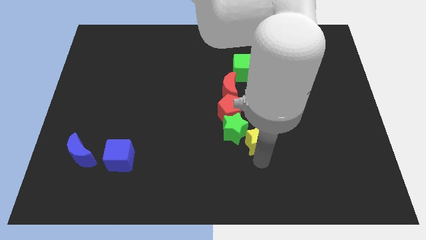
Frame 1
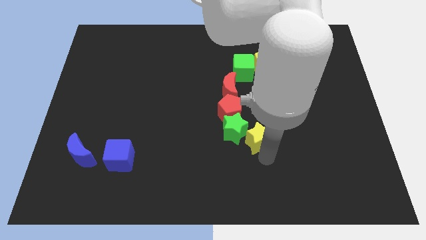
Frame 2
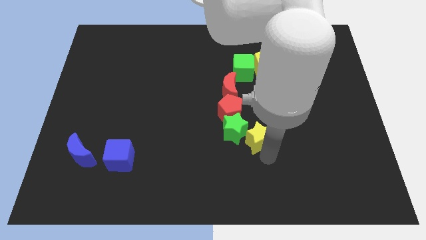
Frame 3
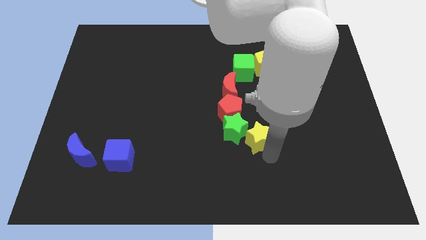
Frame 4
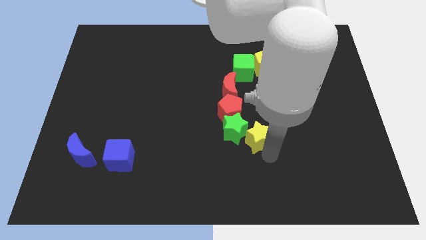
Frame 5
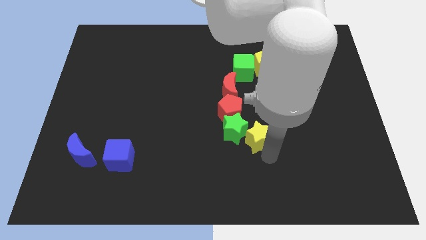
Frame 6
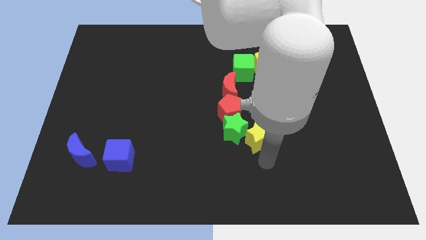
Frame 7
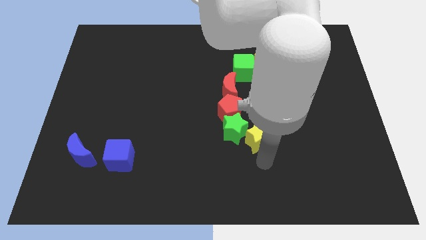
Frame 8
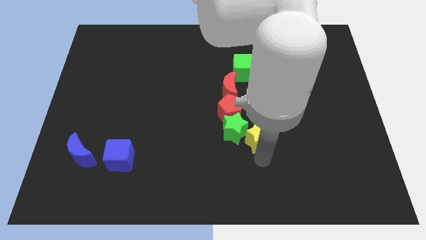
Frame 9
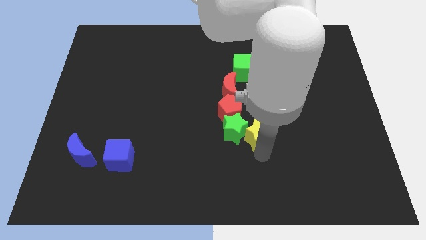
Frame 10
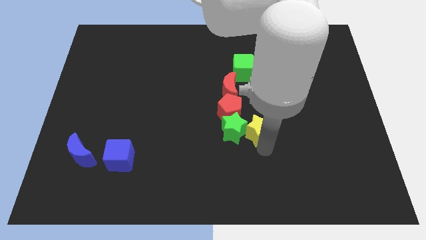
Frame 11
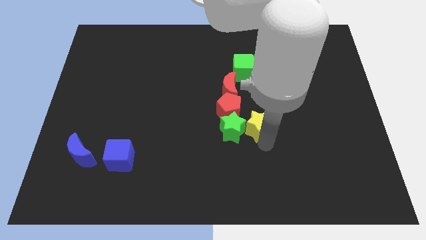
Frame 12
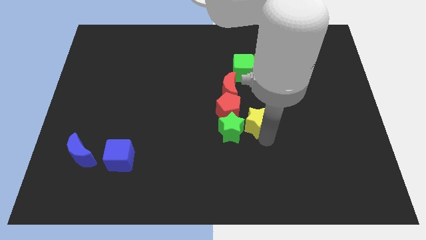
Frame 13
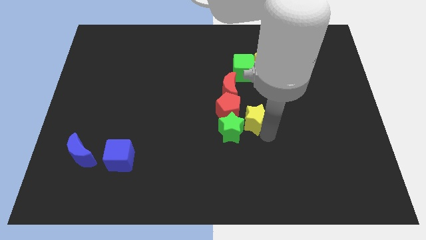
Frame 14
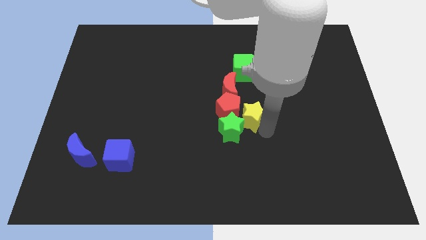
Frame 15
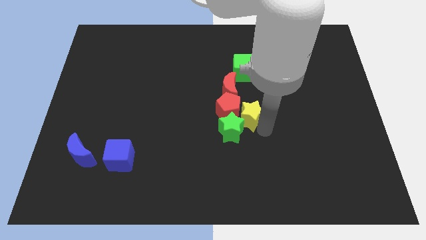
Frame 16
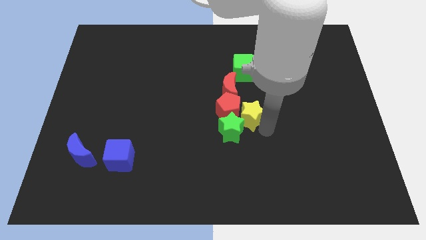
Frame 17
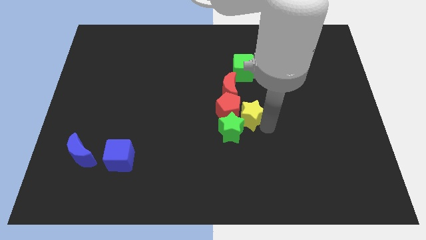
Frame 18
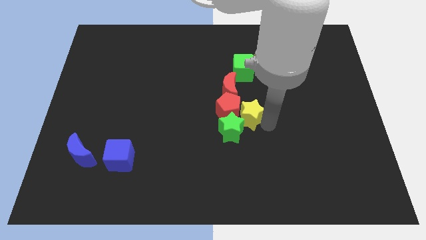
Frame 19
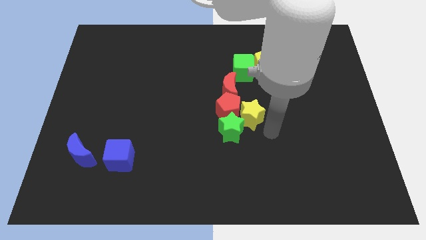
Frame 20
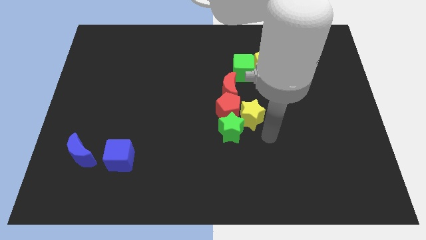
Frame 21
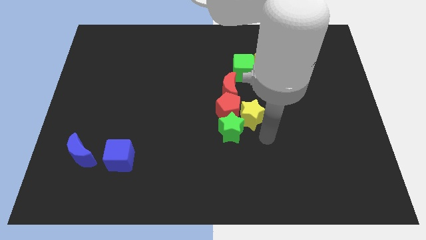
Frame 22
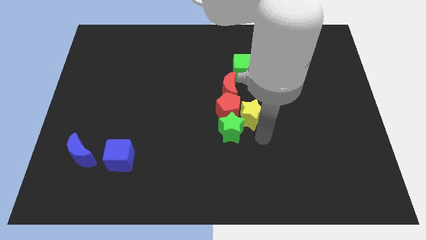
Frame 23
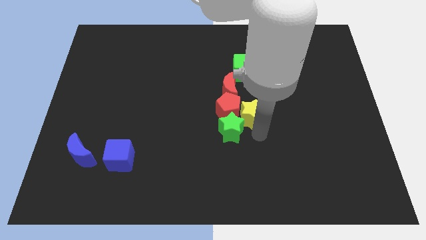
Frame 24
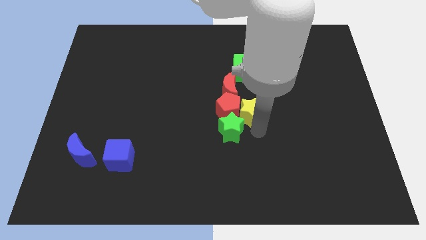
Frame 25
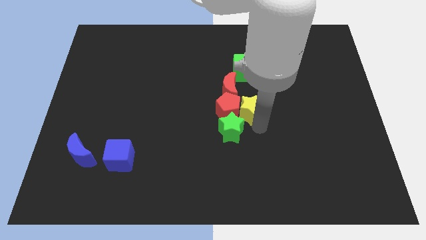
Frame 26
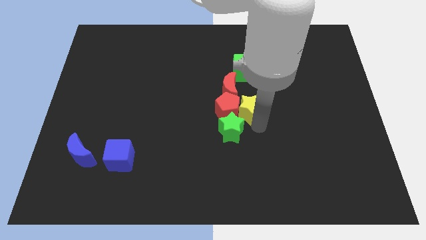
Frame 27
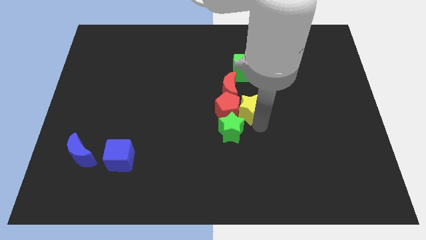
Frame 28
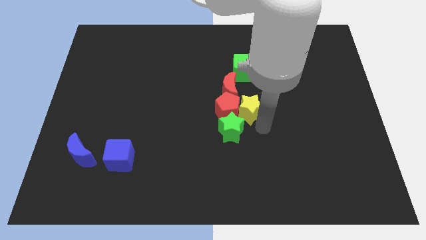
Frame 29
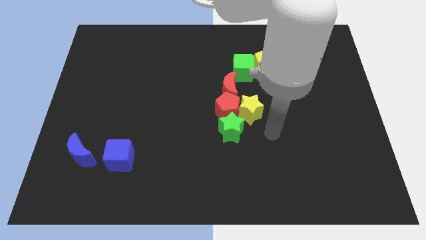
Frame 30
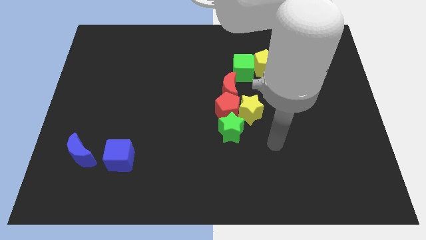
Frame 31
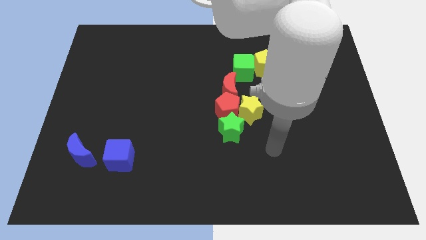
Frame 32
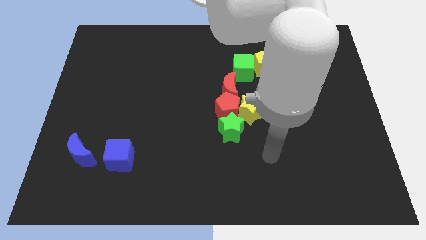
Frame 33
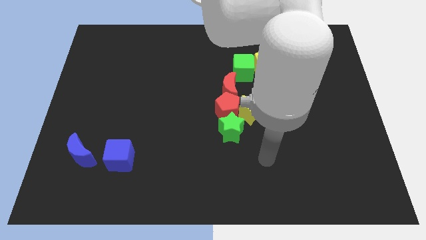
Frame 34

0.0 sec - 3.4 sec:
put the yellow star into red pentagon

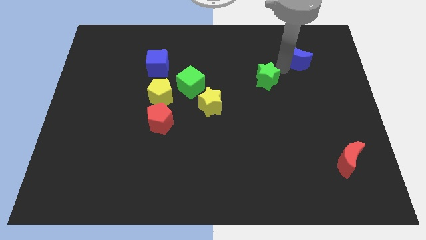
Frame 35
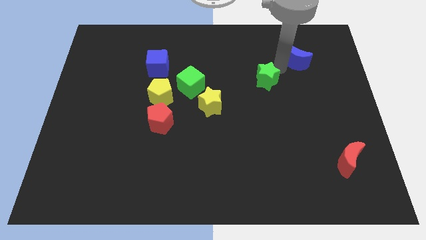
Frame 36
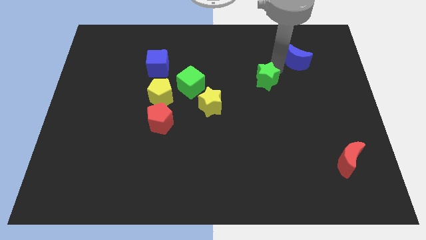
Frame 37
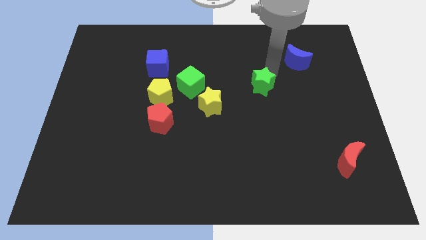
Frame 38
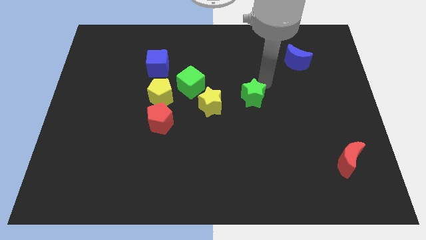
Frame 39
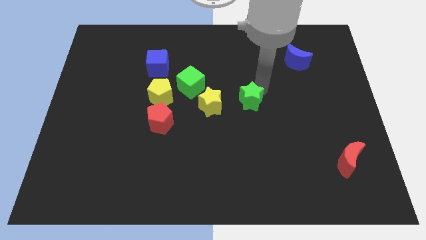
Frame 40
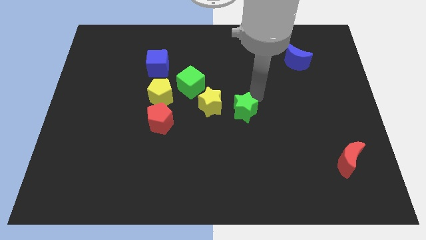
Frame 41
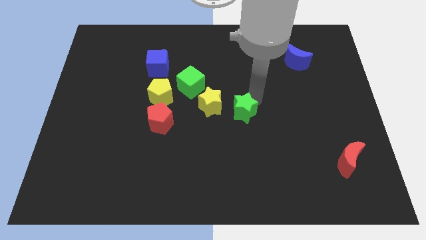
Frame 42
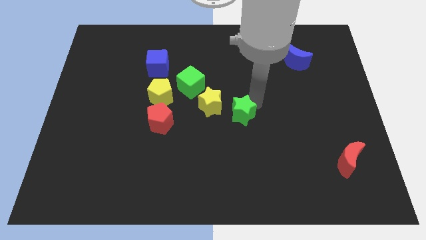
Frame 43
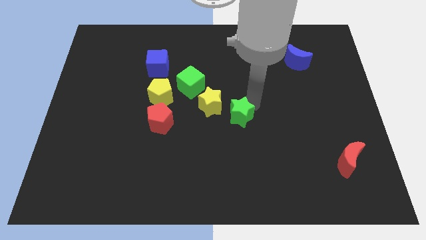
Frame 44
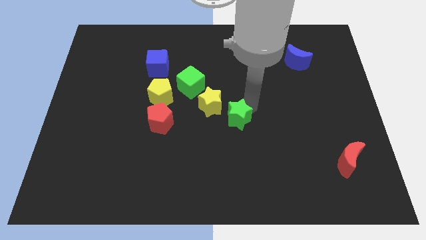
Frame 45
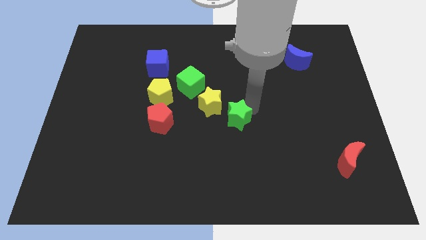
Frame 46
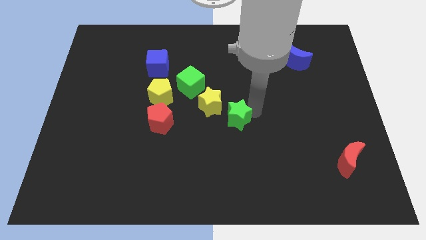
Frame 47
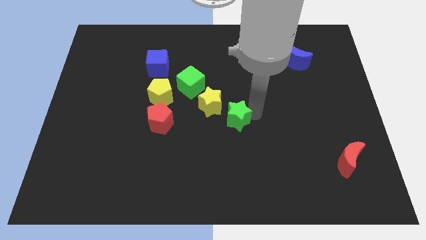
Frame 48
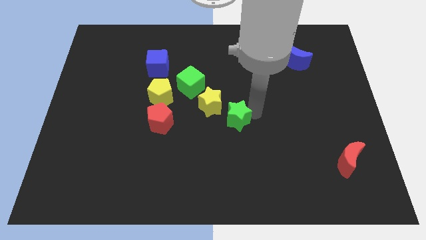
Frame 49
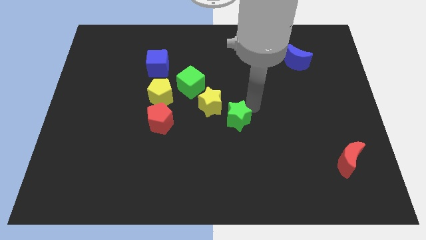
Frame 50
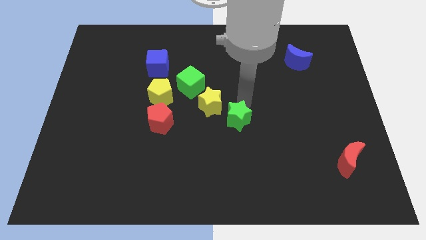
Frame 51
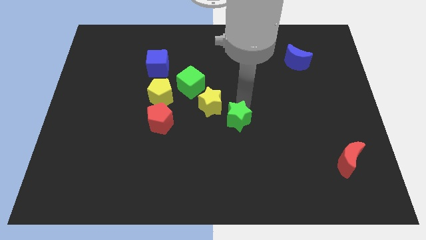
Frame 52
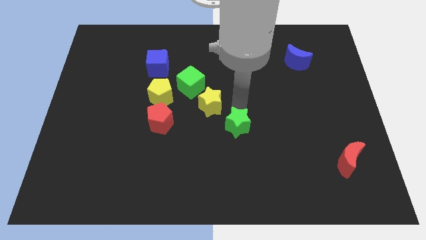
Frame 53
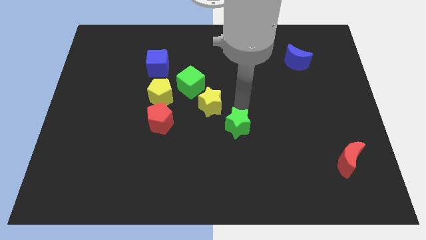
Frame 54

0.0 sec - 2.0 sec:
push the green star to the diagonally right to the green star

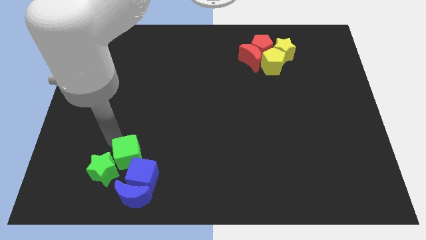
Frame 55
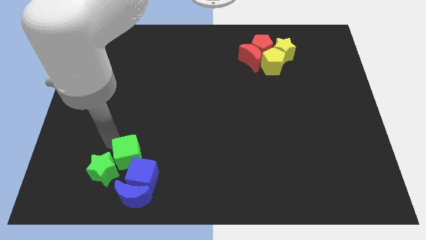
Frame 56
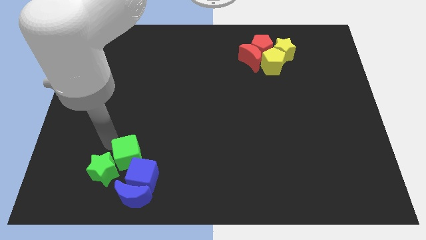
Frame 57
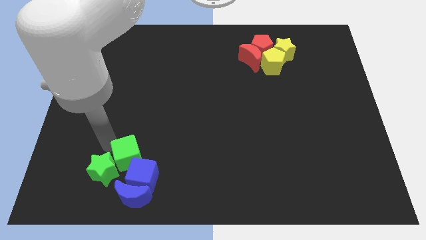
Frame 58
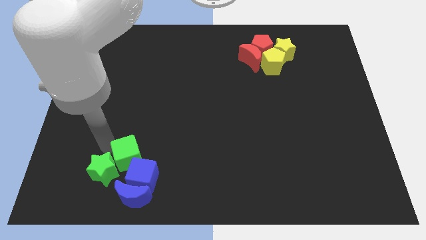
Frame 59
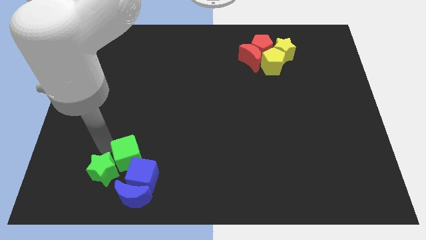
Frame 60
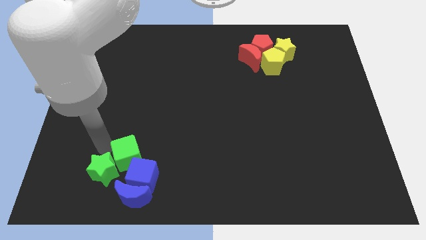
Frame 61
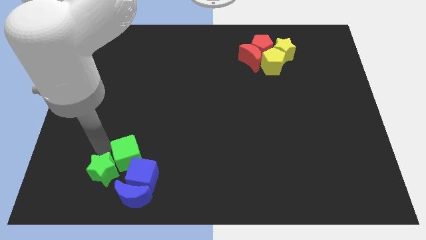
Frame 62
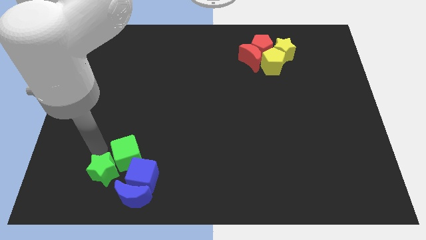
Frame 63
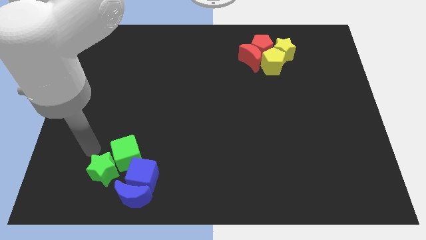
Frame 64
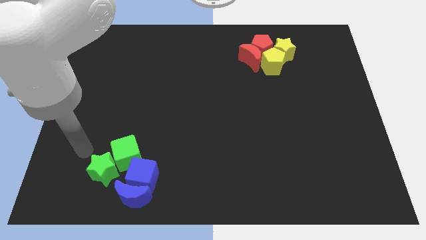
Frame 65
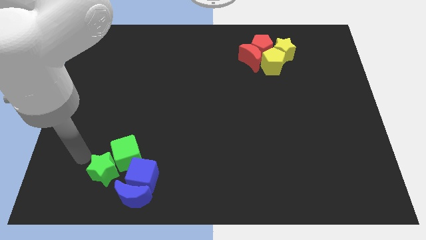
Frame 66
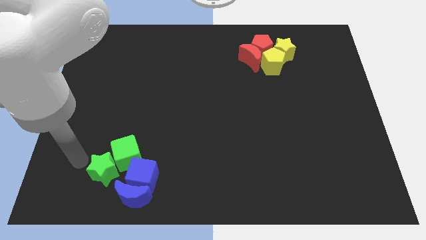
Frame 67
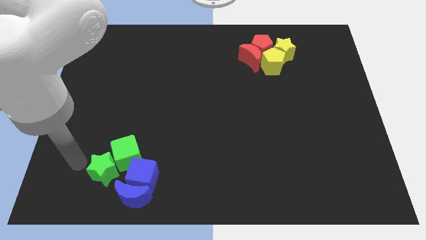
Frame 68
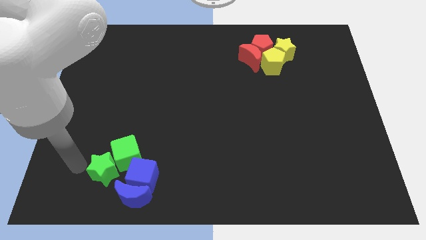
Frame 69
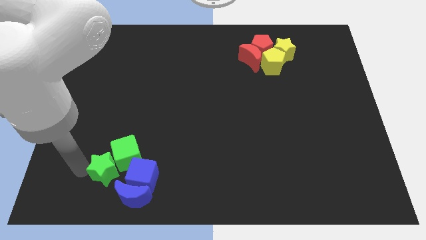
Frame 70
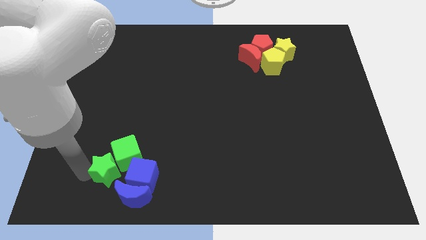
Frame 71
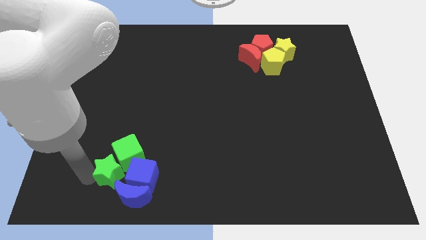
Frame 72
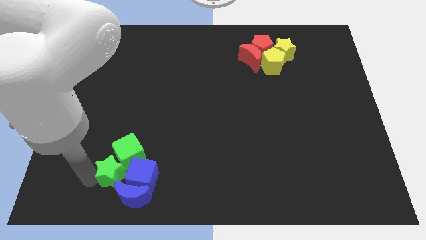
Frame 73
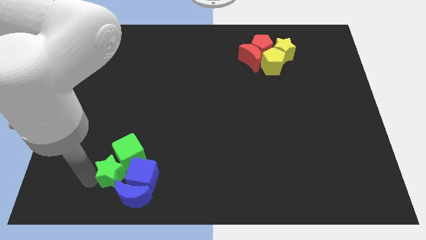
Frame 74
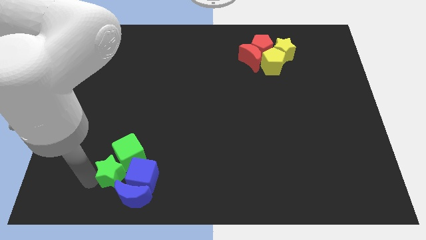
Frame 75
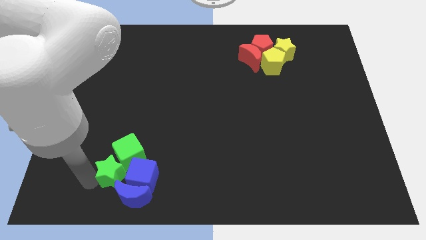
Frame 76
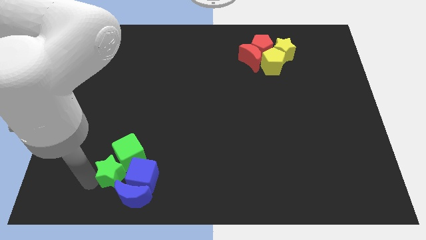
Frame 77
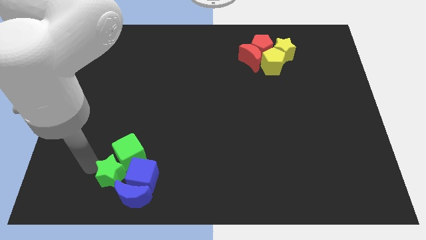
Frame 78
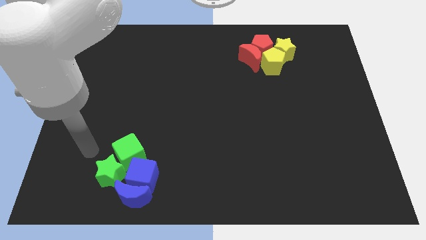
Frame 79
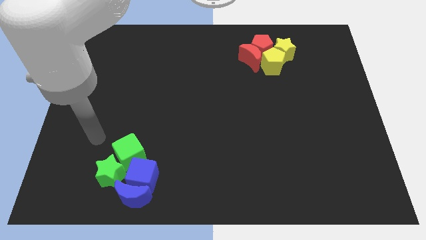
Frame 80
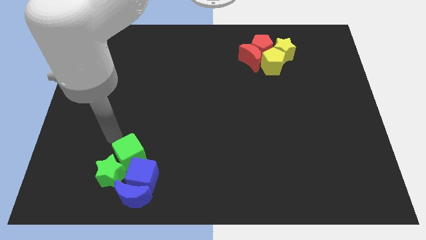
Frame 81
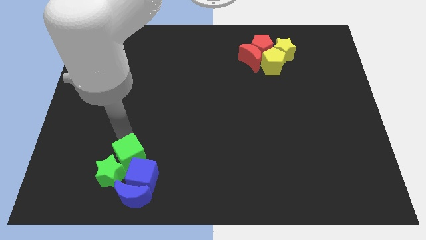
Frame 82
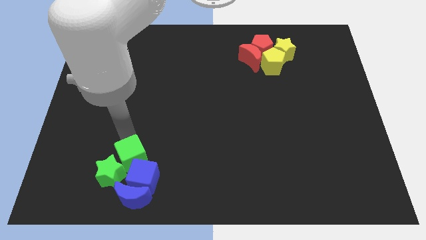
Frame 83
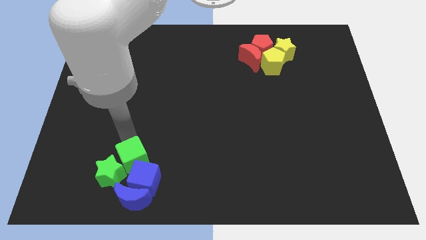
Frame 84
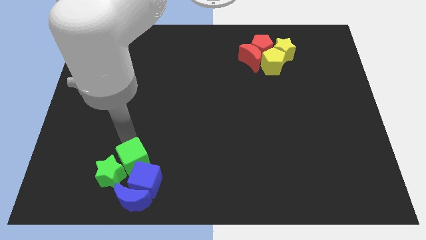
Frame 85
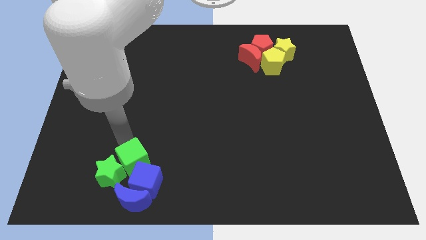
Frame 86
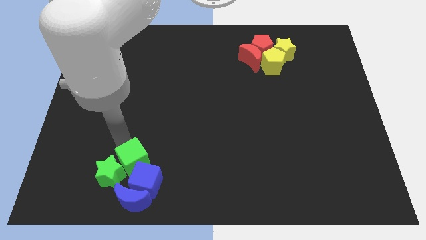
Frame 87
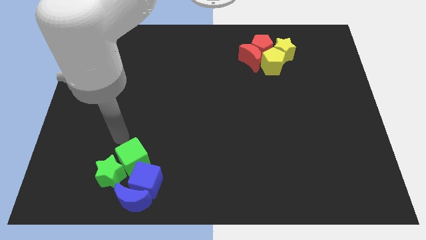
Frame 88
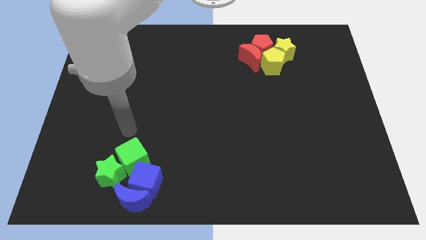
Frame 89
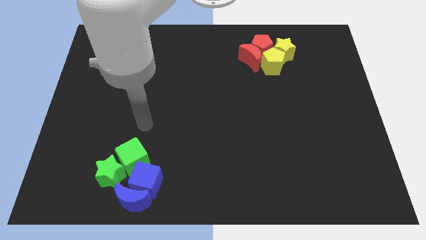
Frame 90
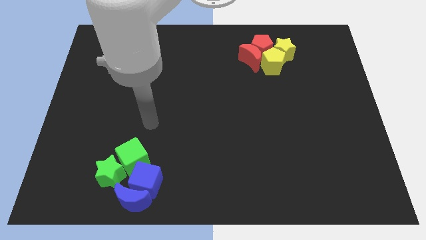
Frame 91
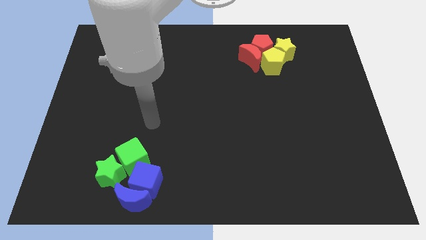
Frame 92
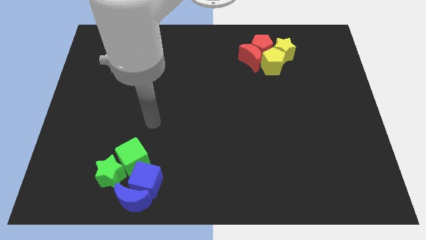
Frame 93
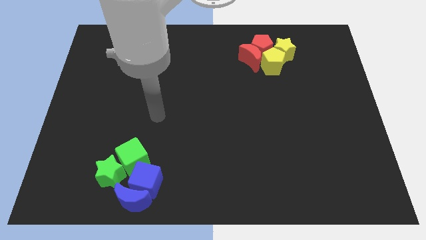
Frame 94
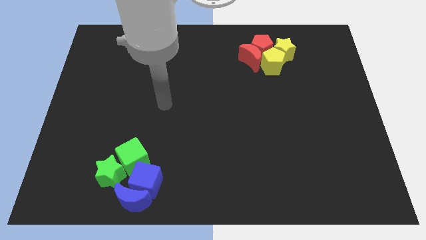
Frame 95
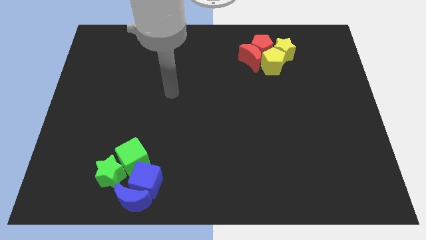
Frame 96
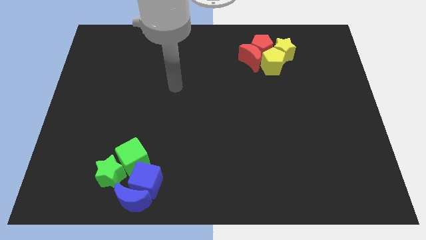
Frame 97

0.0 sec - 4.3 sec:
move the arm away from the group of green and blue blocks
